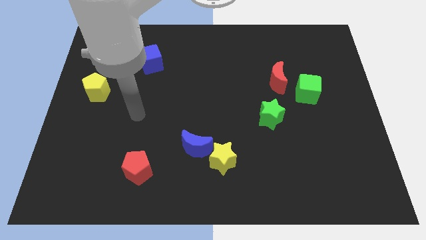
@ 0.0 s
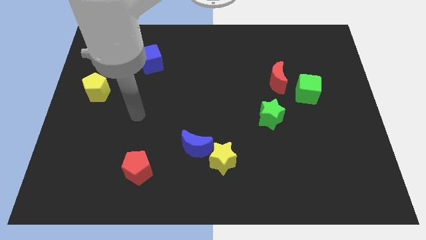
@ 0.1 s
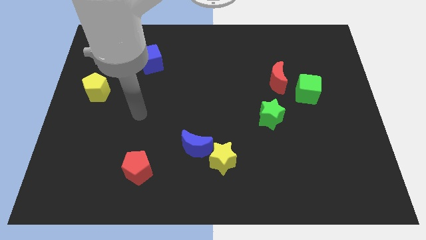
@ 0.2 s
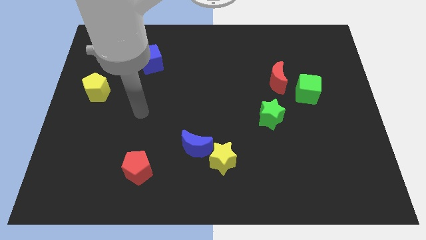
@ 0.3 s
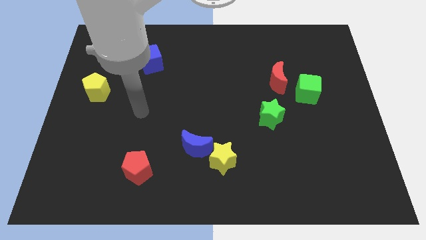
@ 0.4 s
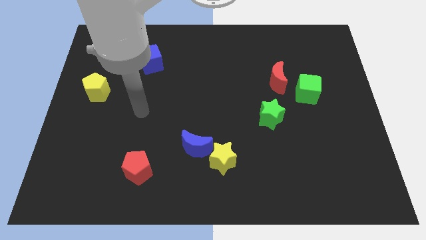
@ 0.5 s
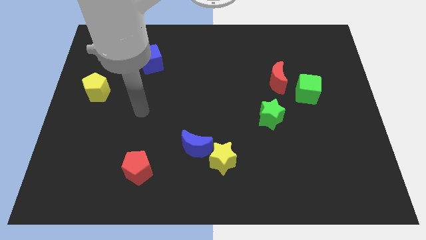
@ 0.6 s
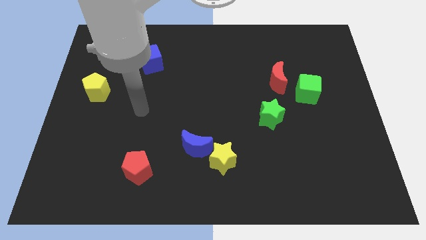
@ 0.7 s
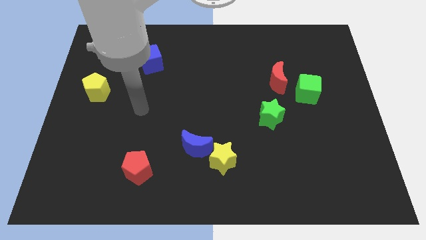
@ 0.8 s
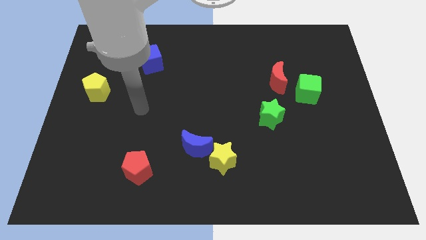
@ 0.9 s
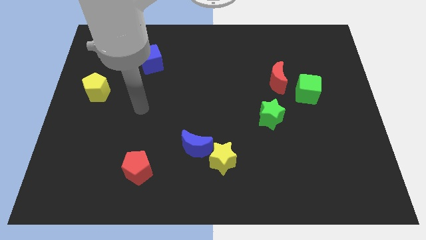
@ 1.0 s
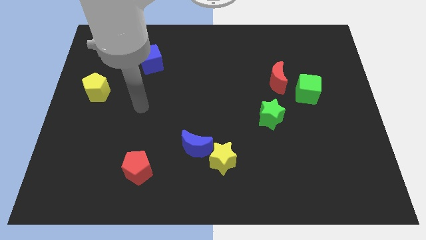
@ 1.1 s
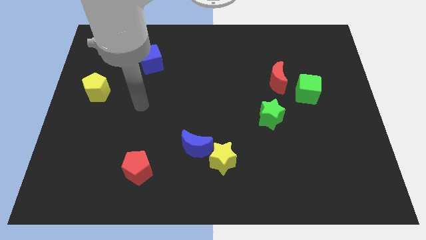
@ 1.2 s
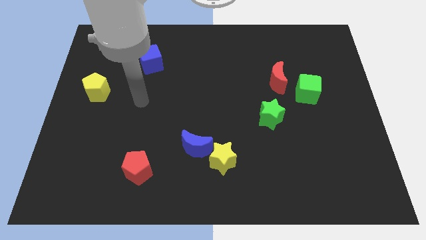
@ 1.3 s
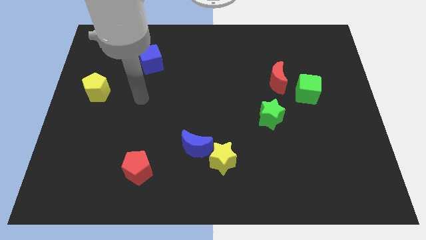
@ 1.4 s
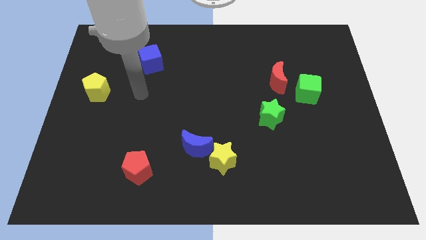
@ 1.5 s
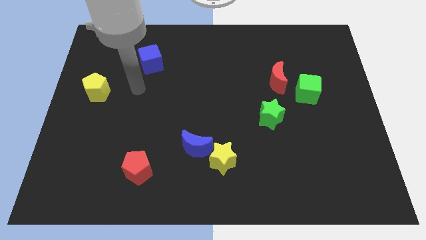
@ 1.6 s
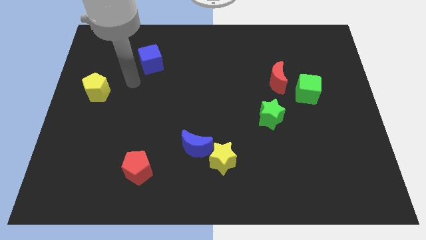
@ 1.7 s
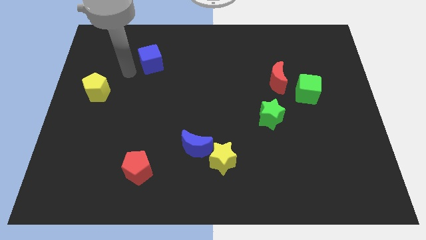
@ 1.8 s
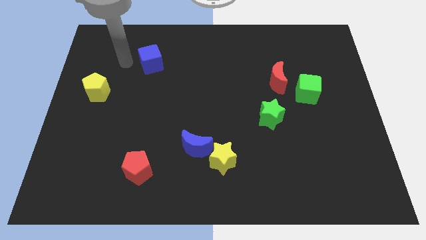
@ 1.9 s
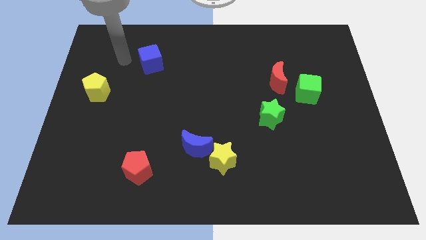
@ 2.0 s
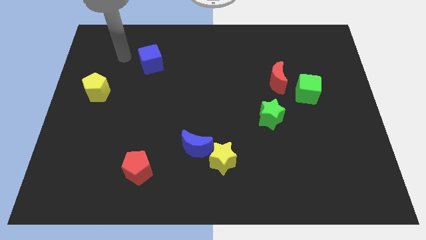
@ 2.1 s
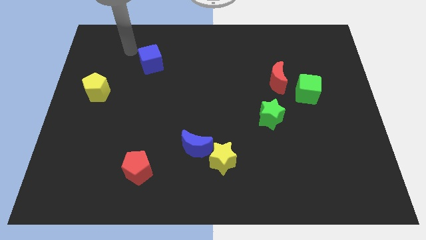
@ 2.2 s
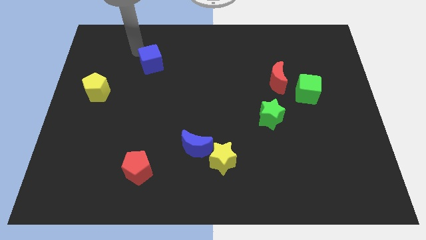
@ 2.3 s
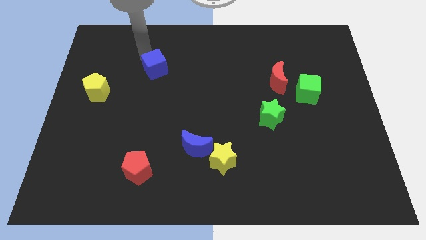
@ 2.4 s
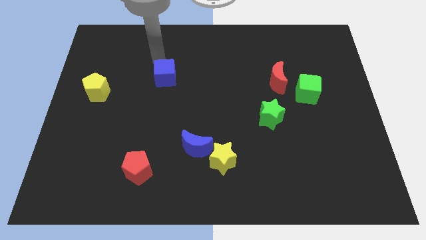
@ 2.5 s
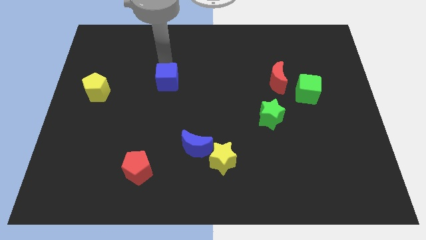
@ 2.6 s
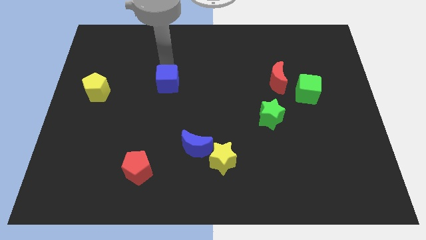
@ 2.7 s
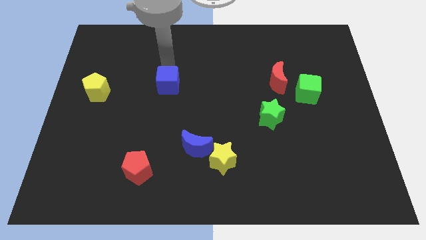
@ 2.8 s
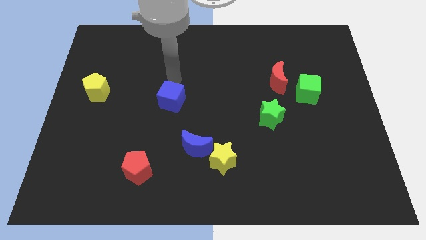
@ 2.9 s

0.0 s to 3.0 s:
push the blue cube slightly downwards

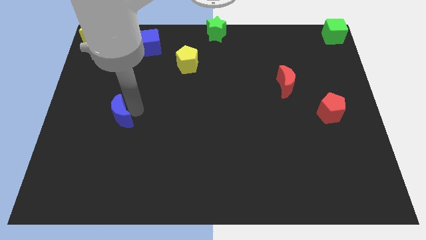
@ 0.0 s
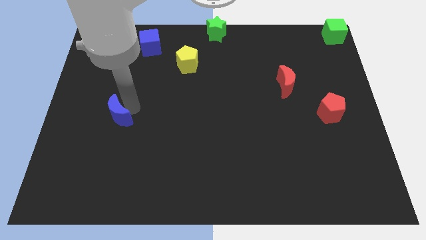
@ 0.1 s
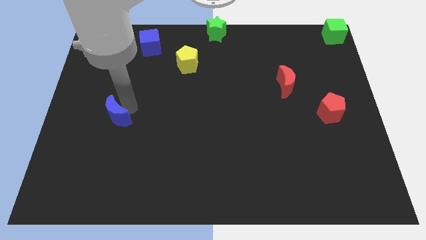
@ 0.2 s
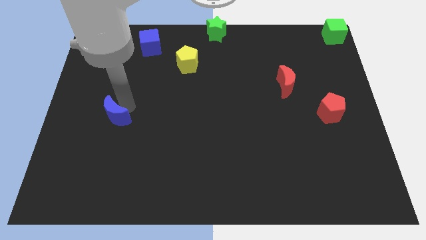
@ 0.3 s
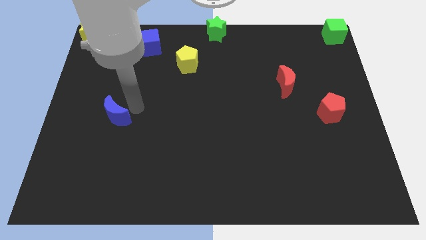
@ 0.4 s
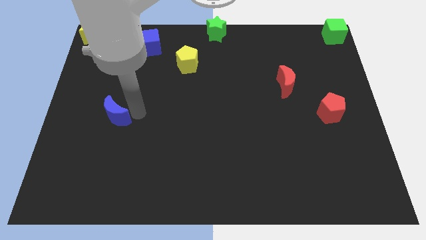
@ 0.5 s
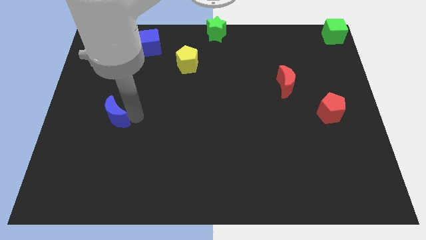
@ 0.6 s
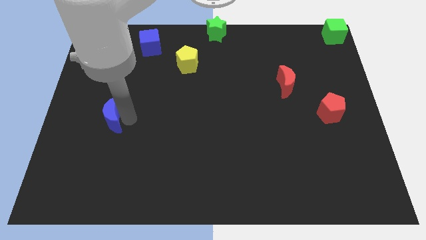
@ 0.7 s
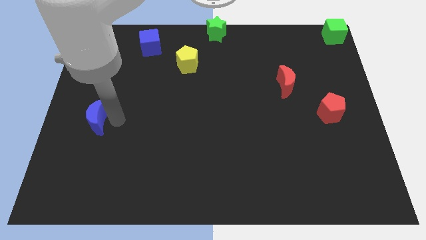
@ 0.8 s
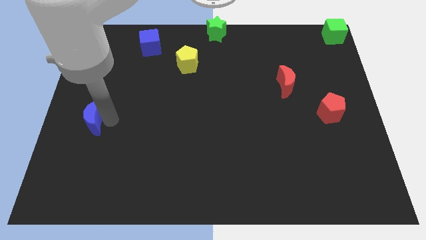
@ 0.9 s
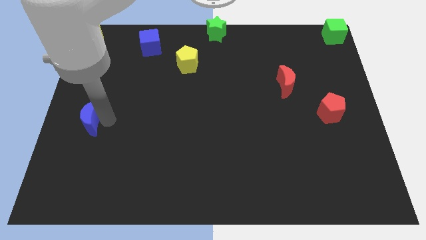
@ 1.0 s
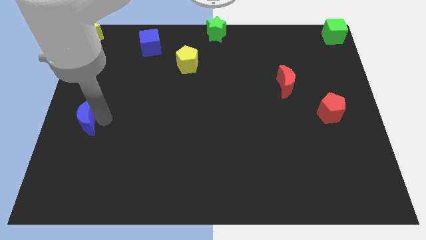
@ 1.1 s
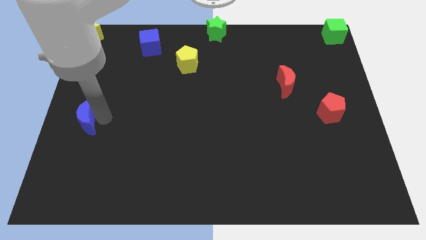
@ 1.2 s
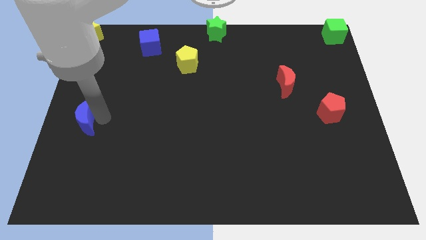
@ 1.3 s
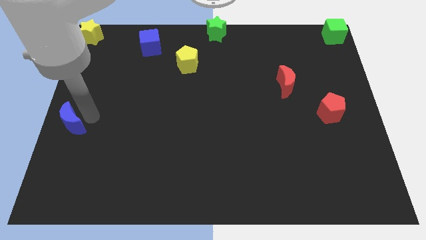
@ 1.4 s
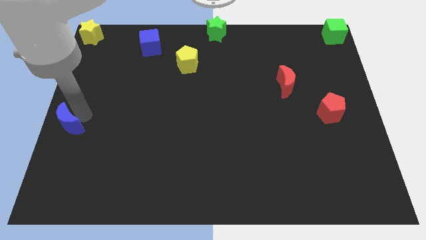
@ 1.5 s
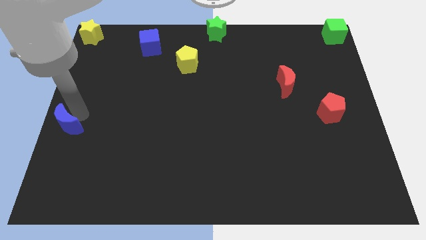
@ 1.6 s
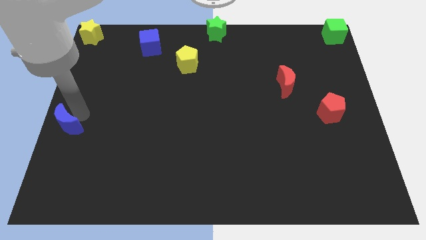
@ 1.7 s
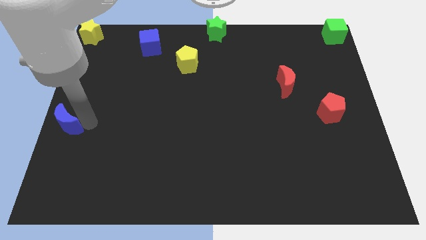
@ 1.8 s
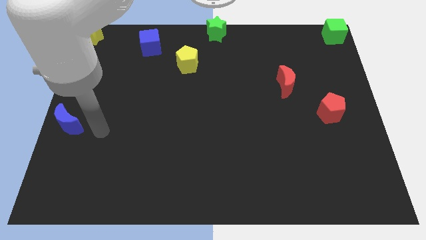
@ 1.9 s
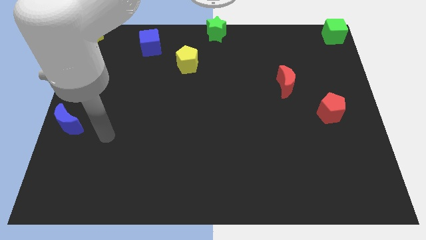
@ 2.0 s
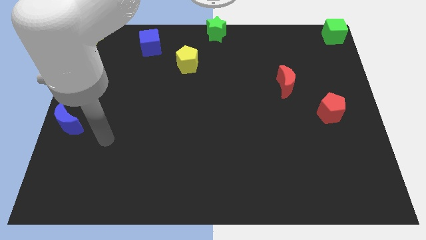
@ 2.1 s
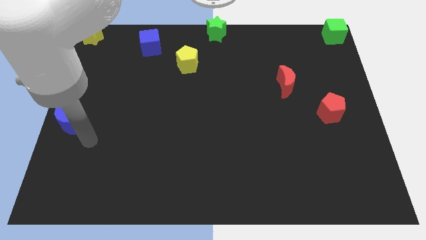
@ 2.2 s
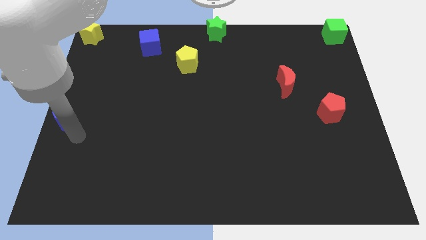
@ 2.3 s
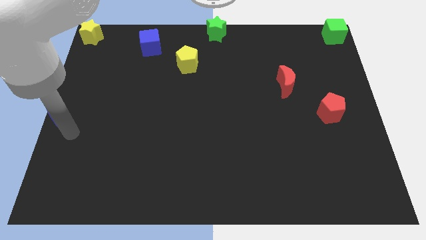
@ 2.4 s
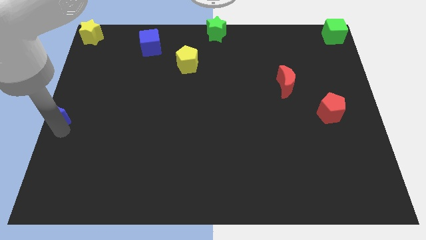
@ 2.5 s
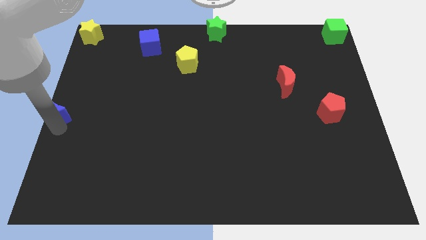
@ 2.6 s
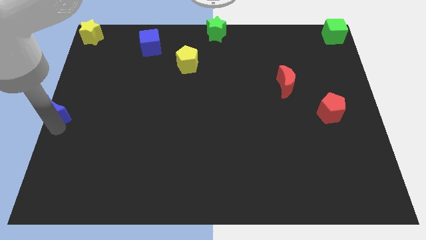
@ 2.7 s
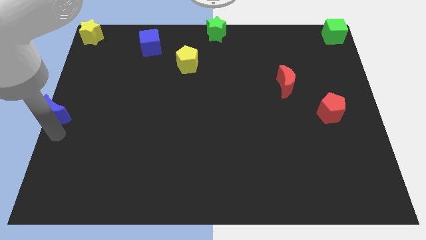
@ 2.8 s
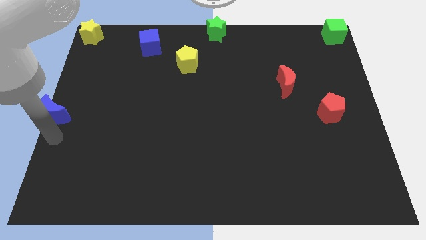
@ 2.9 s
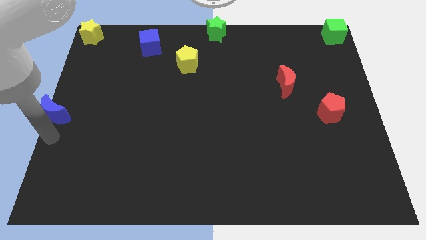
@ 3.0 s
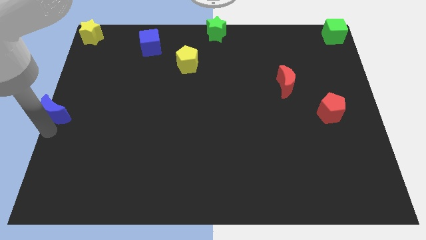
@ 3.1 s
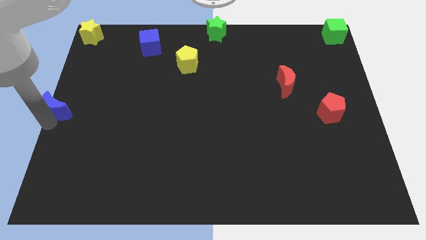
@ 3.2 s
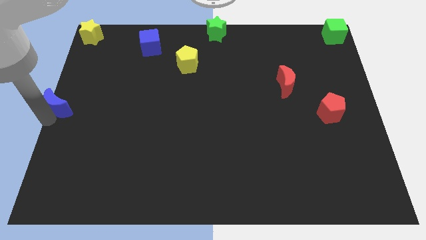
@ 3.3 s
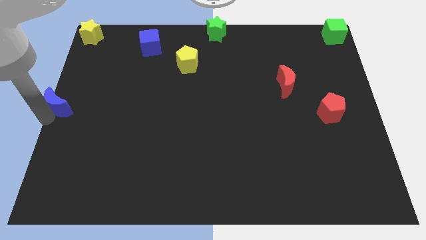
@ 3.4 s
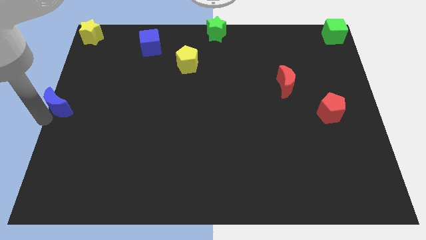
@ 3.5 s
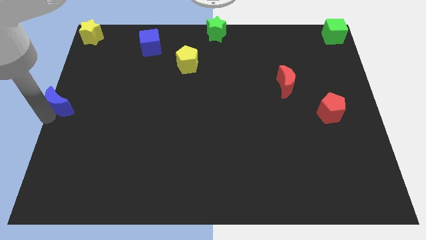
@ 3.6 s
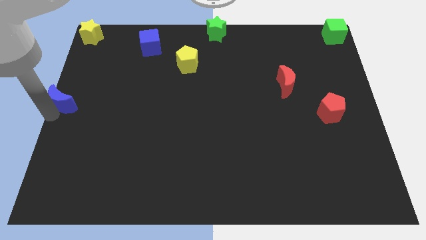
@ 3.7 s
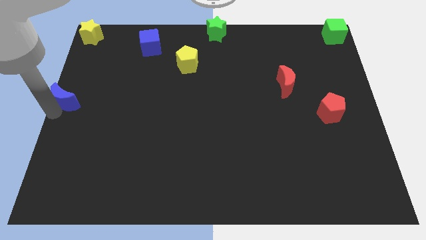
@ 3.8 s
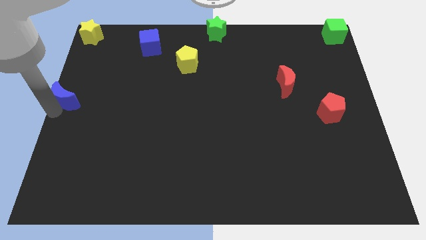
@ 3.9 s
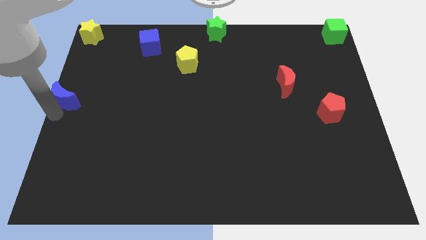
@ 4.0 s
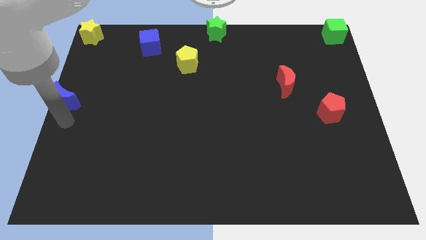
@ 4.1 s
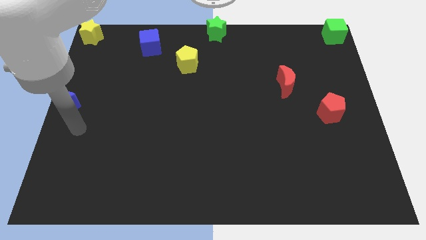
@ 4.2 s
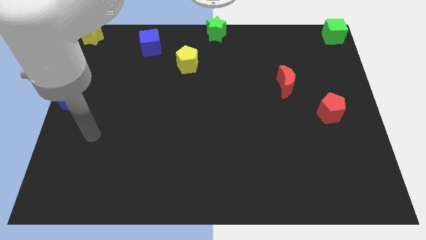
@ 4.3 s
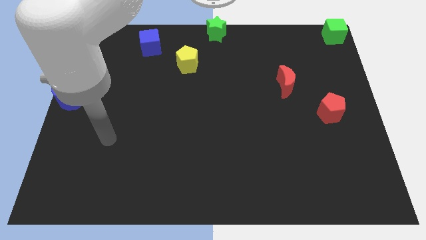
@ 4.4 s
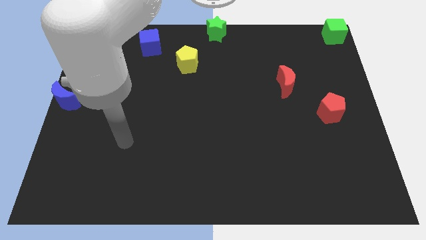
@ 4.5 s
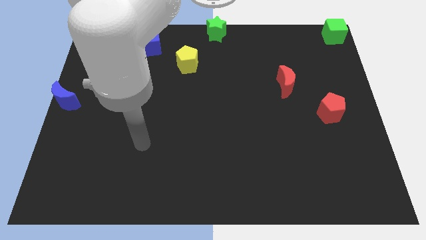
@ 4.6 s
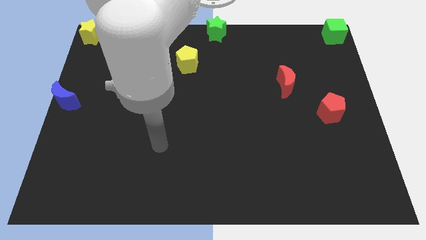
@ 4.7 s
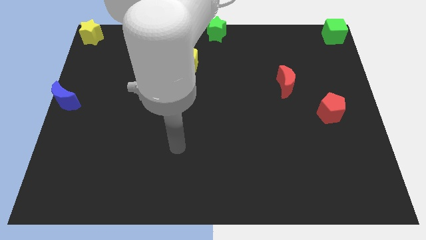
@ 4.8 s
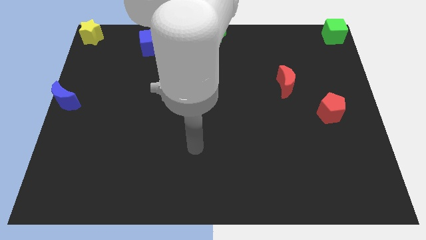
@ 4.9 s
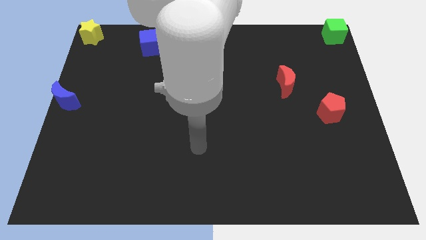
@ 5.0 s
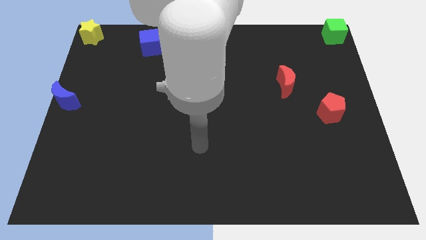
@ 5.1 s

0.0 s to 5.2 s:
push blue crescent to the left center

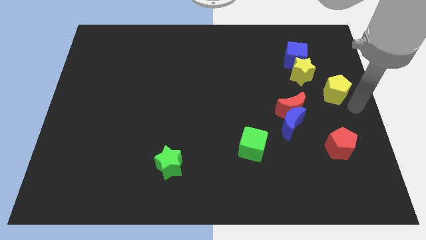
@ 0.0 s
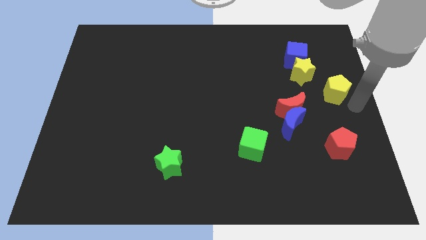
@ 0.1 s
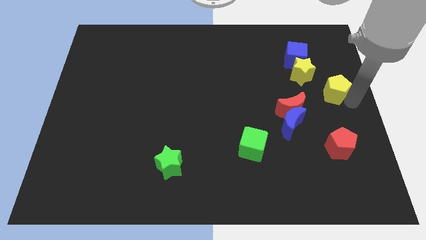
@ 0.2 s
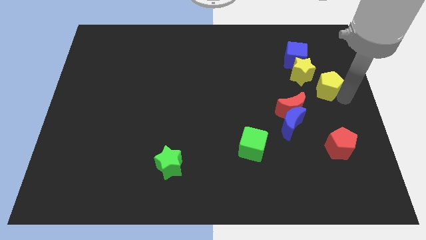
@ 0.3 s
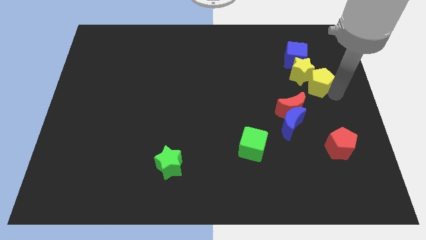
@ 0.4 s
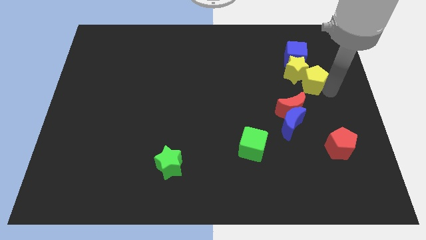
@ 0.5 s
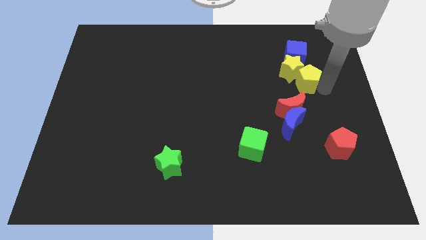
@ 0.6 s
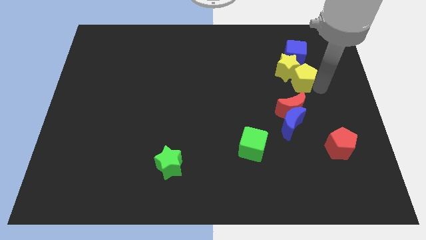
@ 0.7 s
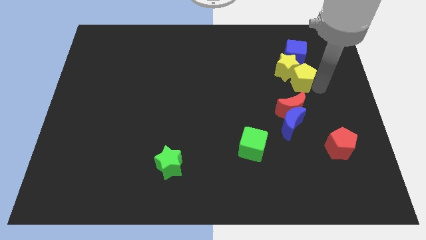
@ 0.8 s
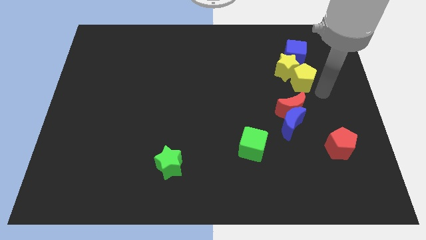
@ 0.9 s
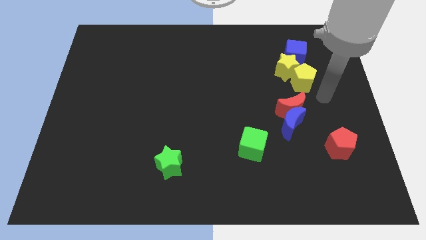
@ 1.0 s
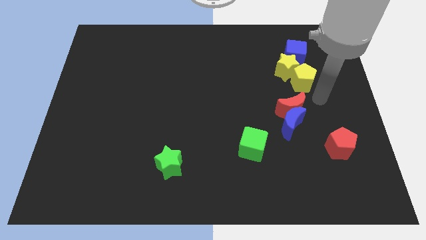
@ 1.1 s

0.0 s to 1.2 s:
move the yellow pentagon into the yellow star
